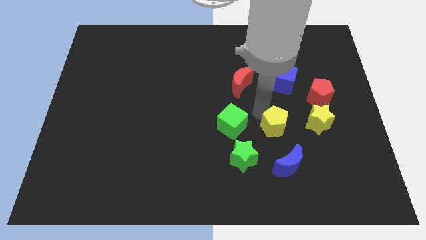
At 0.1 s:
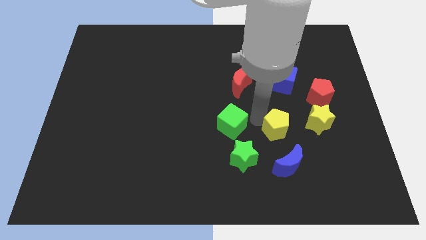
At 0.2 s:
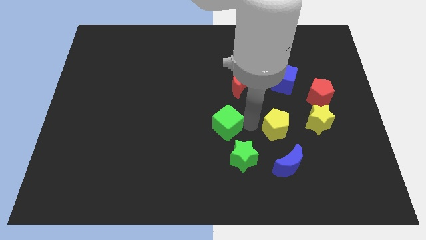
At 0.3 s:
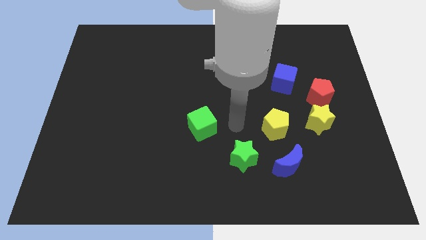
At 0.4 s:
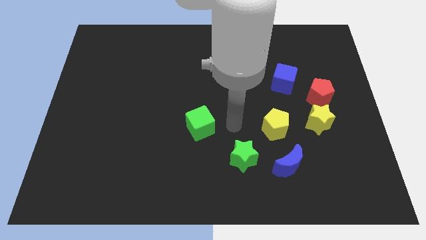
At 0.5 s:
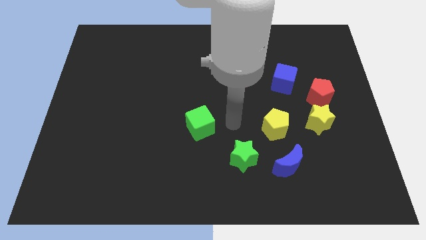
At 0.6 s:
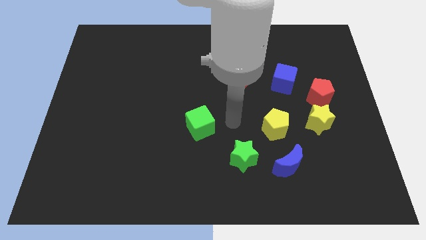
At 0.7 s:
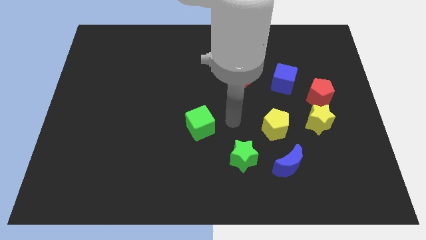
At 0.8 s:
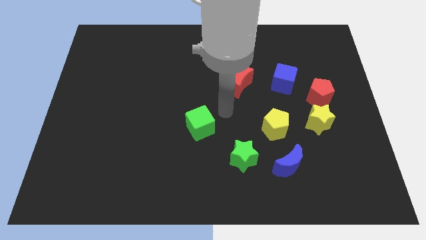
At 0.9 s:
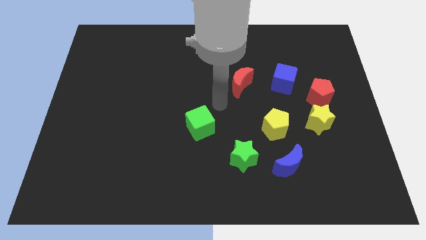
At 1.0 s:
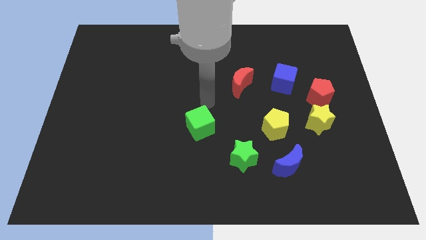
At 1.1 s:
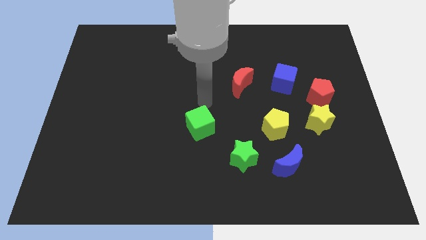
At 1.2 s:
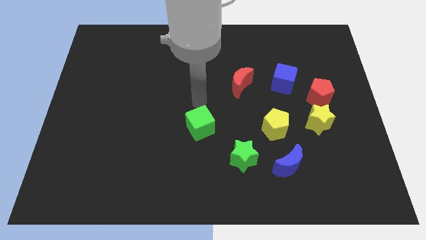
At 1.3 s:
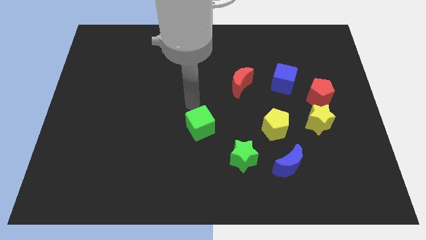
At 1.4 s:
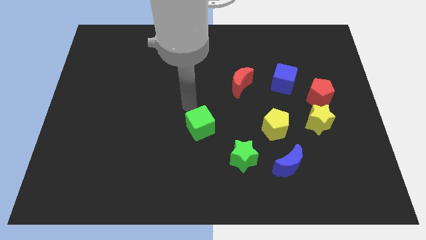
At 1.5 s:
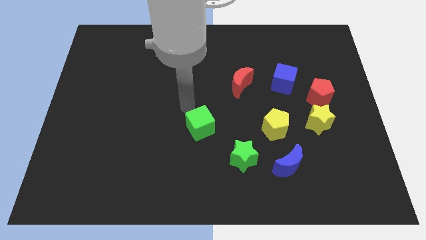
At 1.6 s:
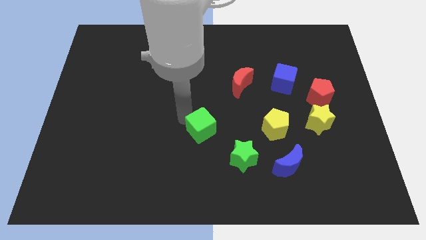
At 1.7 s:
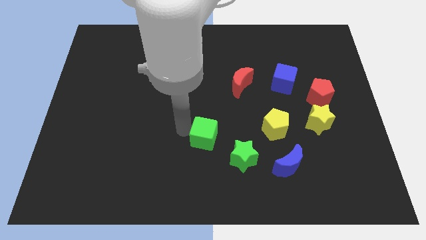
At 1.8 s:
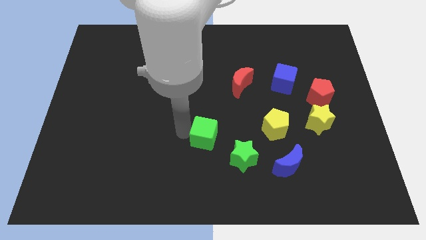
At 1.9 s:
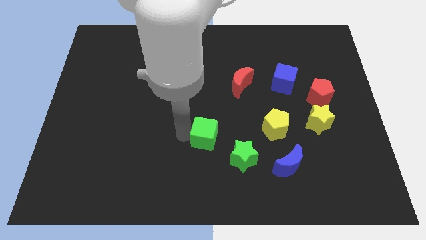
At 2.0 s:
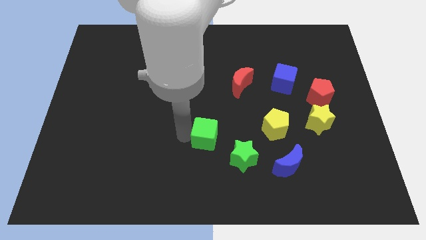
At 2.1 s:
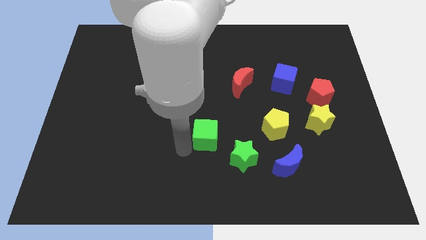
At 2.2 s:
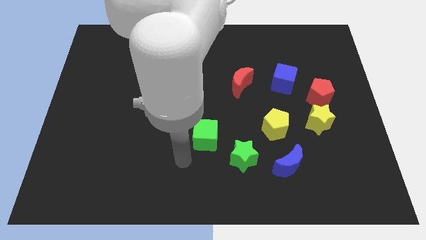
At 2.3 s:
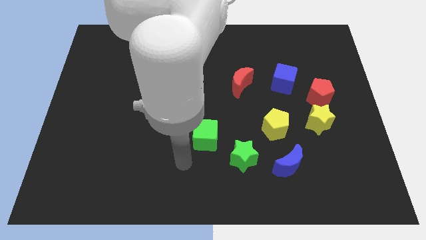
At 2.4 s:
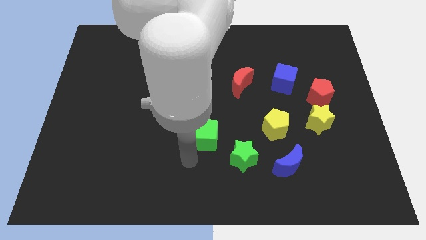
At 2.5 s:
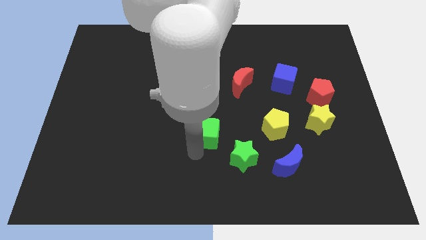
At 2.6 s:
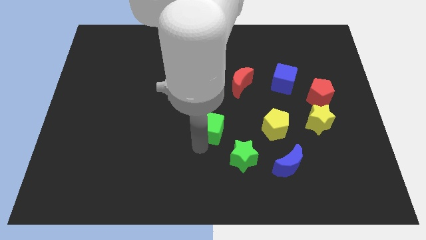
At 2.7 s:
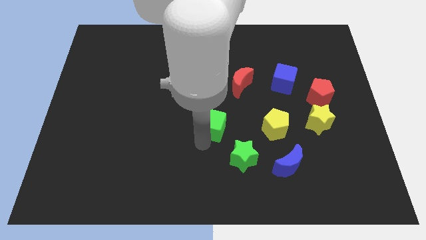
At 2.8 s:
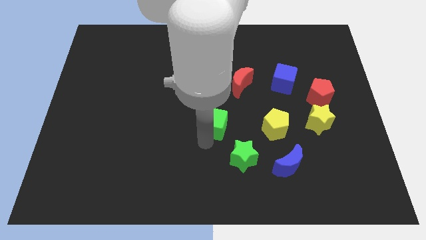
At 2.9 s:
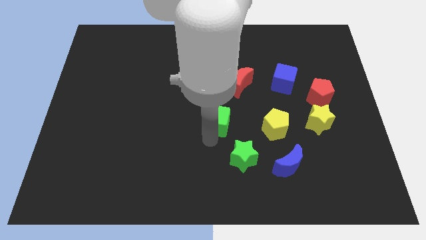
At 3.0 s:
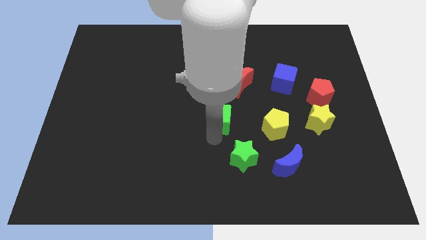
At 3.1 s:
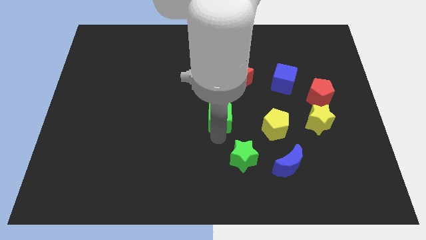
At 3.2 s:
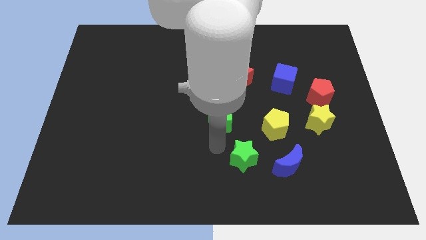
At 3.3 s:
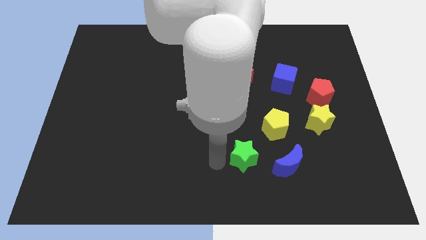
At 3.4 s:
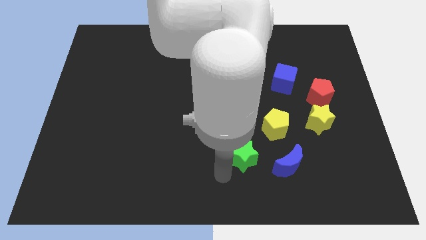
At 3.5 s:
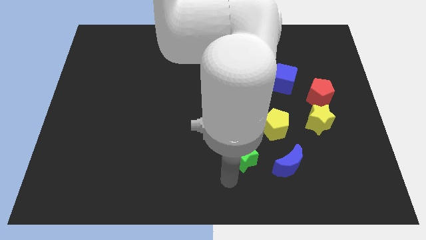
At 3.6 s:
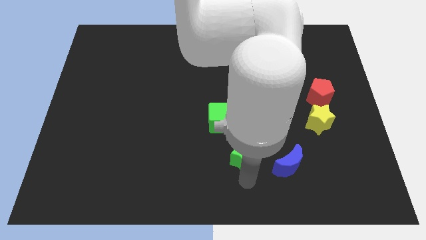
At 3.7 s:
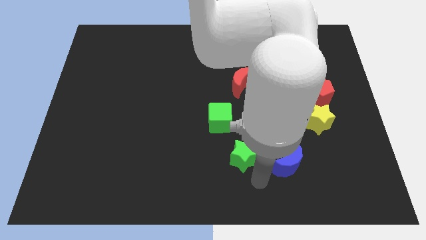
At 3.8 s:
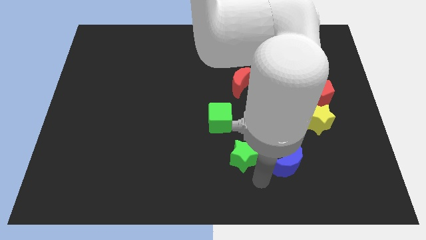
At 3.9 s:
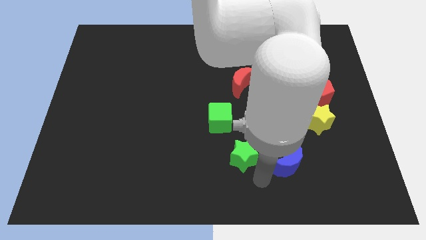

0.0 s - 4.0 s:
place the green cube to the left side of yellow pentagon

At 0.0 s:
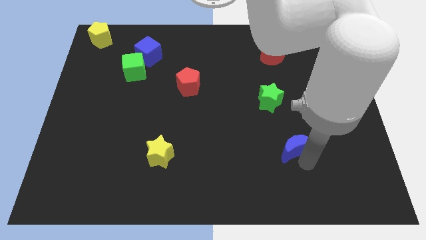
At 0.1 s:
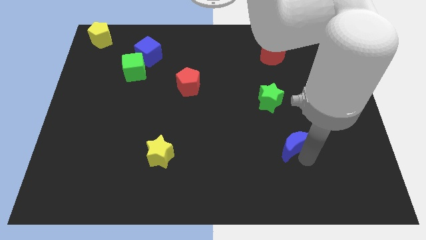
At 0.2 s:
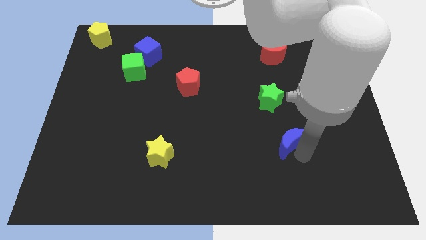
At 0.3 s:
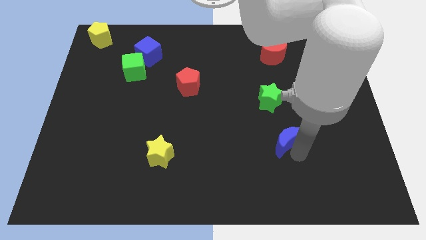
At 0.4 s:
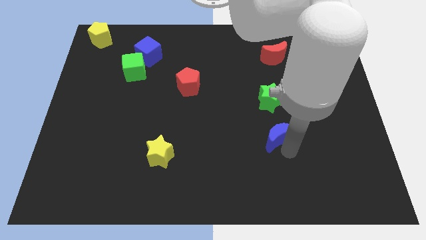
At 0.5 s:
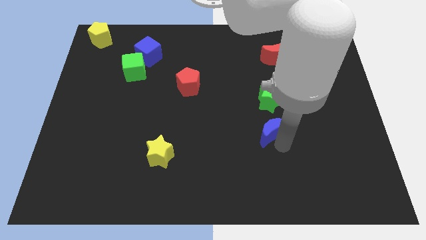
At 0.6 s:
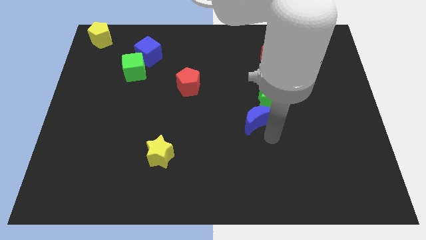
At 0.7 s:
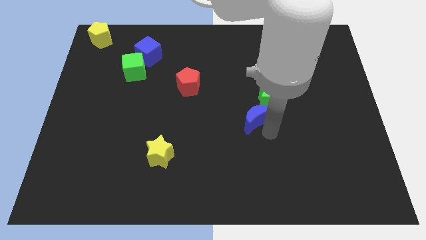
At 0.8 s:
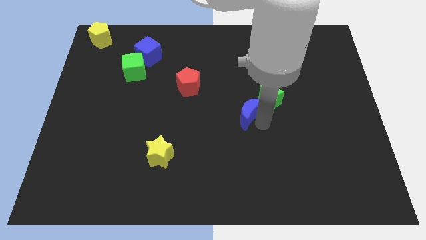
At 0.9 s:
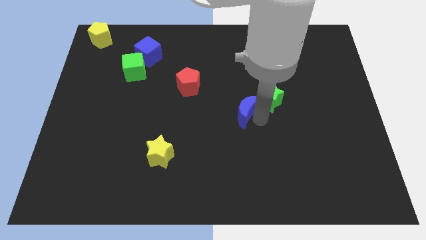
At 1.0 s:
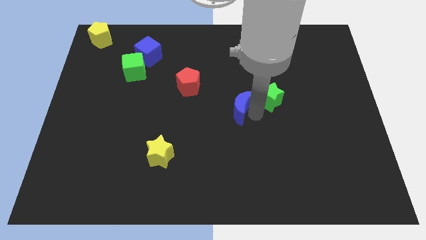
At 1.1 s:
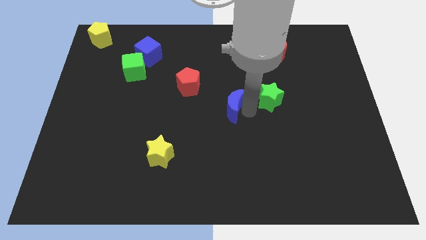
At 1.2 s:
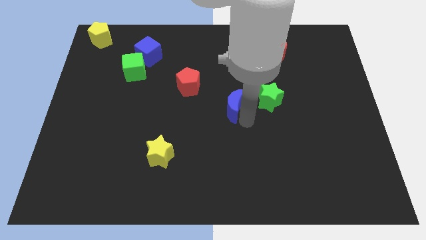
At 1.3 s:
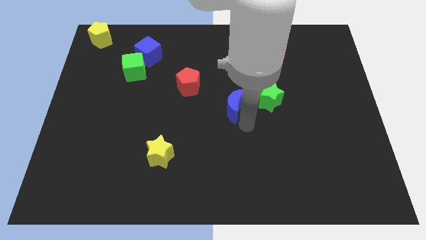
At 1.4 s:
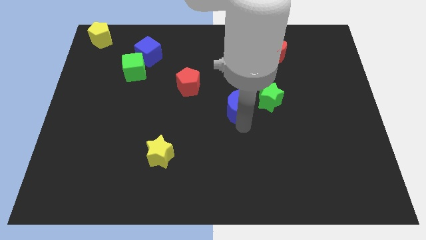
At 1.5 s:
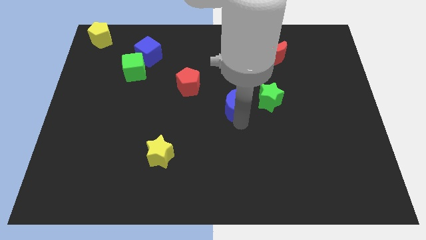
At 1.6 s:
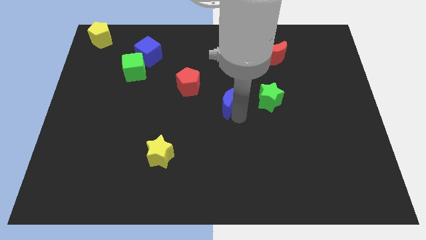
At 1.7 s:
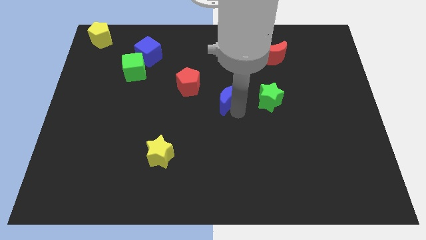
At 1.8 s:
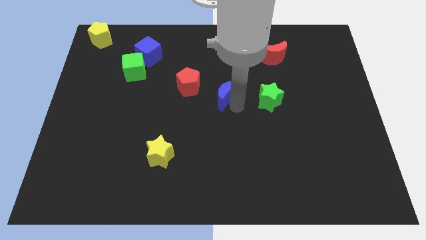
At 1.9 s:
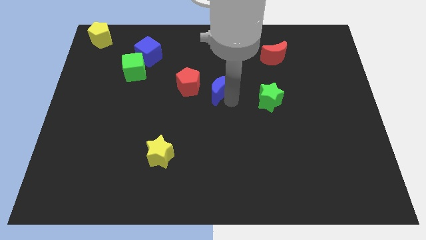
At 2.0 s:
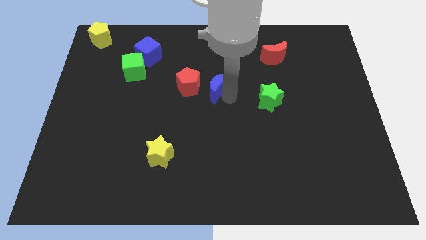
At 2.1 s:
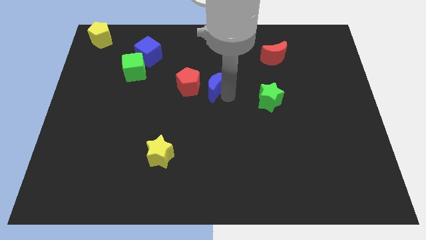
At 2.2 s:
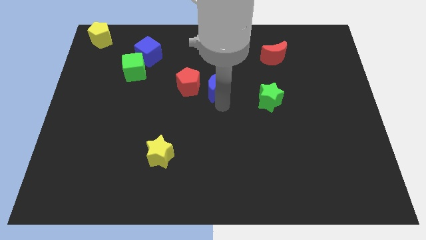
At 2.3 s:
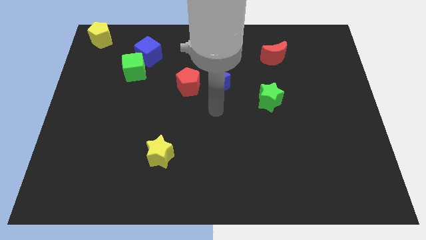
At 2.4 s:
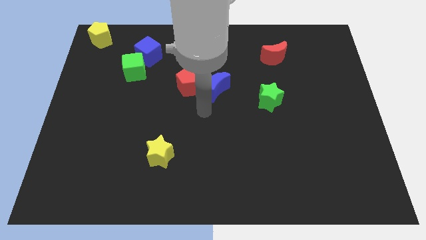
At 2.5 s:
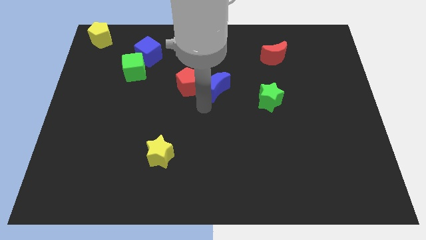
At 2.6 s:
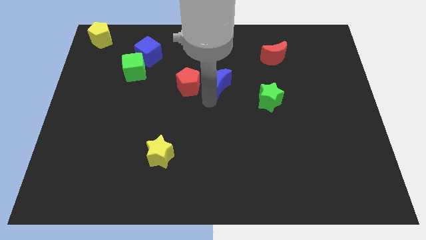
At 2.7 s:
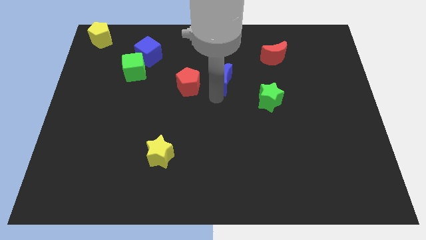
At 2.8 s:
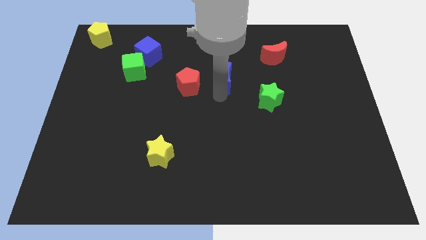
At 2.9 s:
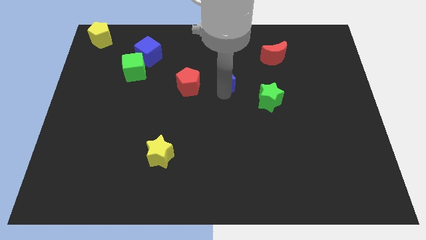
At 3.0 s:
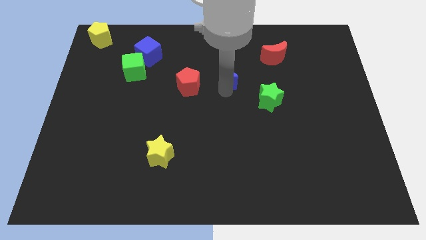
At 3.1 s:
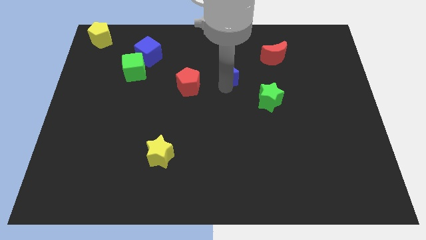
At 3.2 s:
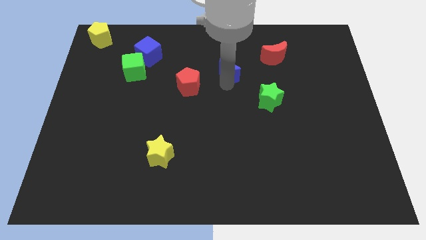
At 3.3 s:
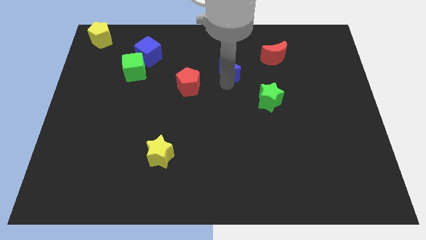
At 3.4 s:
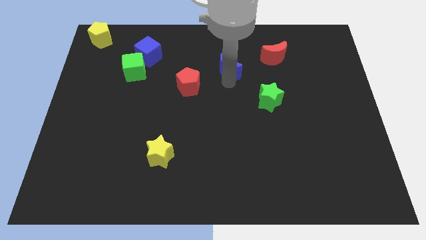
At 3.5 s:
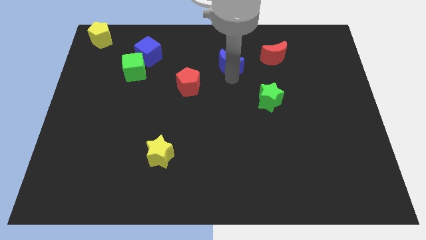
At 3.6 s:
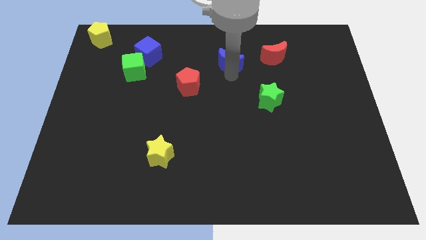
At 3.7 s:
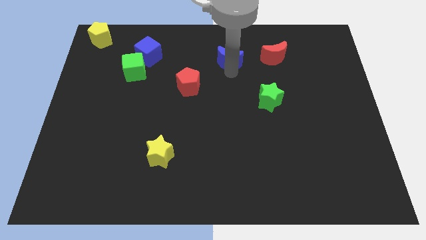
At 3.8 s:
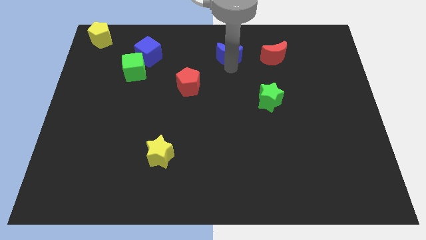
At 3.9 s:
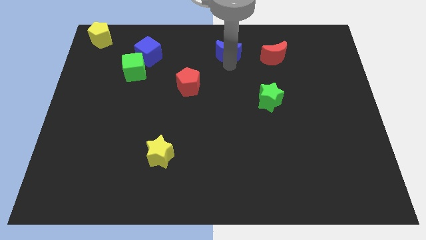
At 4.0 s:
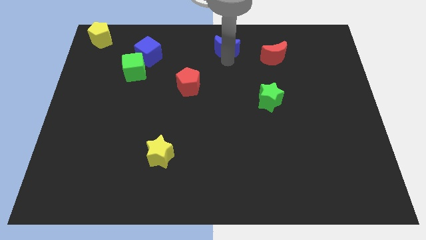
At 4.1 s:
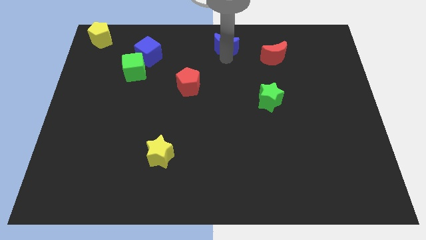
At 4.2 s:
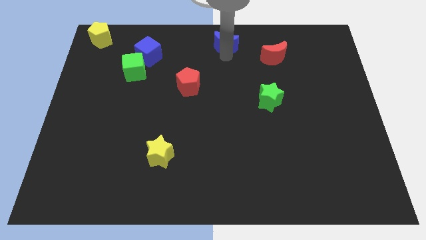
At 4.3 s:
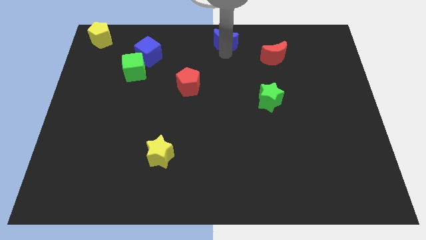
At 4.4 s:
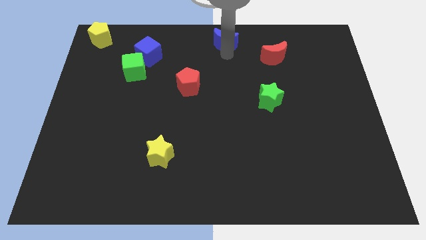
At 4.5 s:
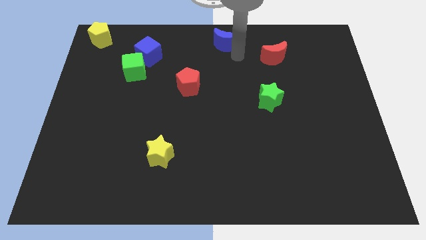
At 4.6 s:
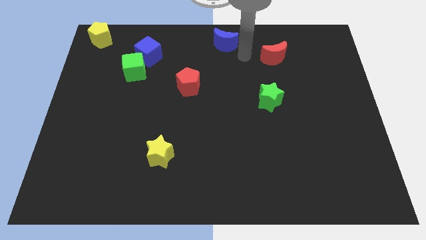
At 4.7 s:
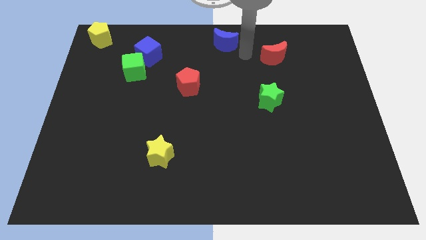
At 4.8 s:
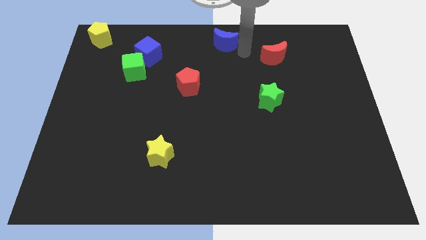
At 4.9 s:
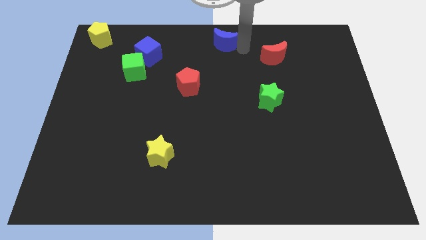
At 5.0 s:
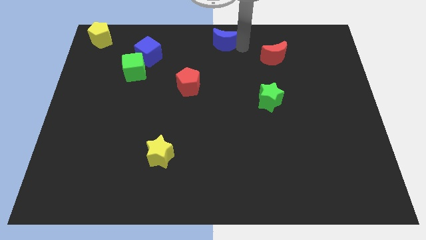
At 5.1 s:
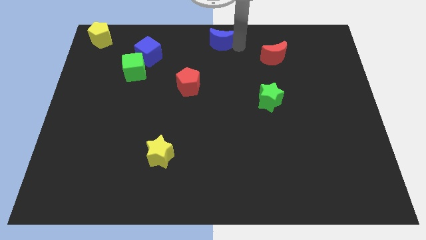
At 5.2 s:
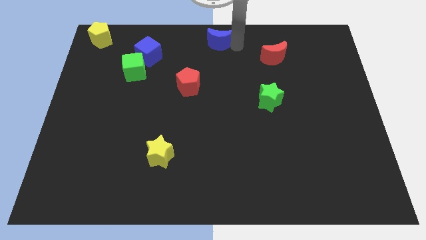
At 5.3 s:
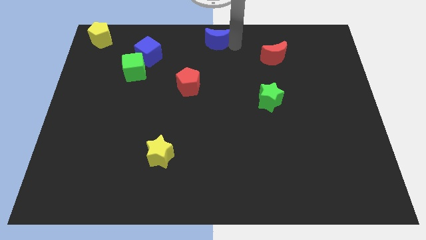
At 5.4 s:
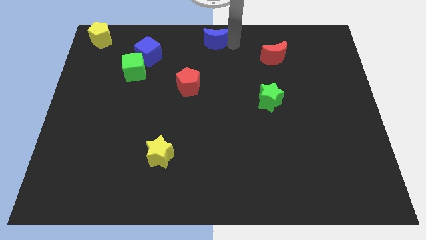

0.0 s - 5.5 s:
place the blue crescent at the top center of the board
